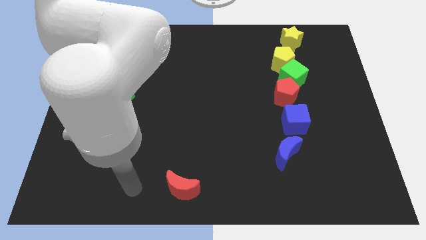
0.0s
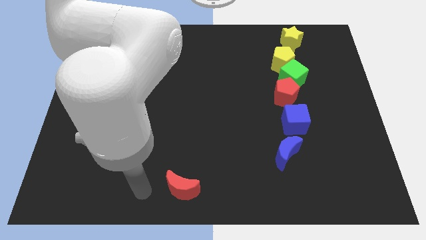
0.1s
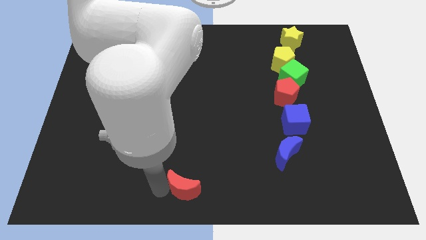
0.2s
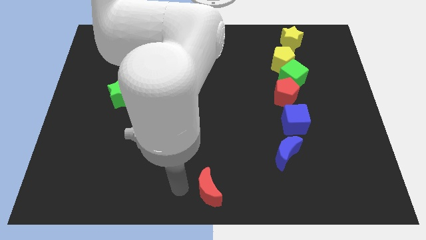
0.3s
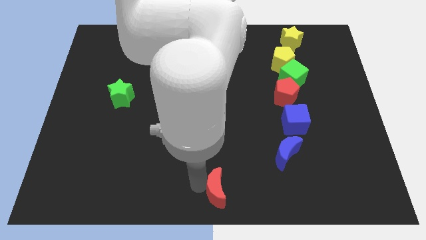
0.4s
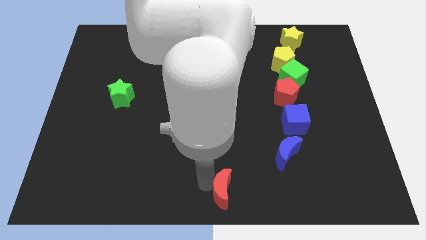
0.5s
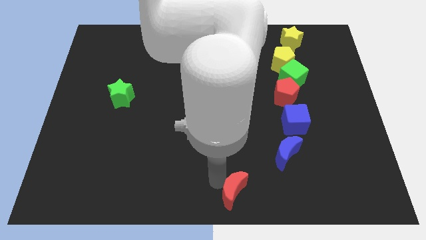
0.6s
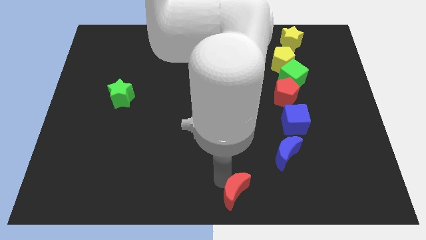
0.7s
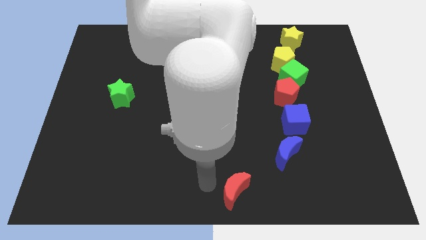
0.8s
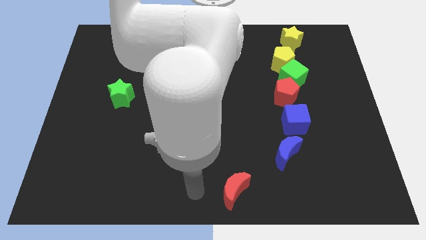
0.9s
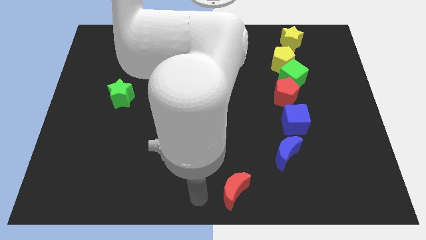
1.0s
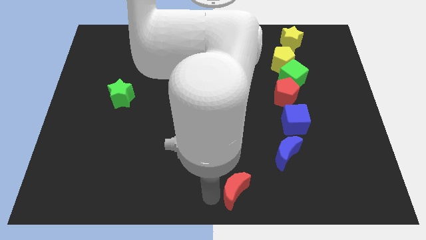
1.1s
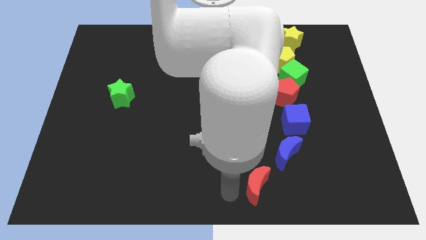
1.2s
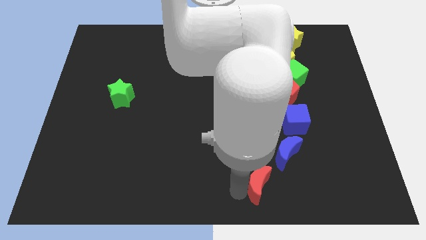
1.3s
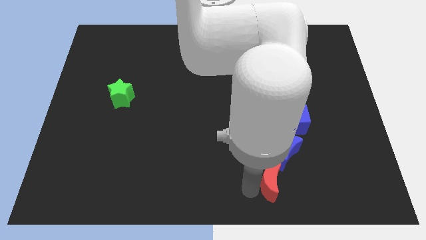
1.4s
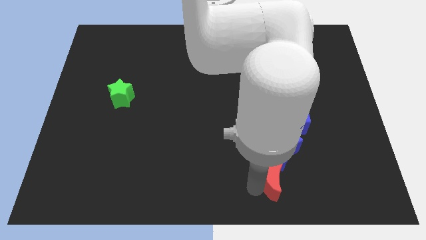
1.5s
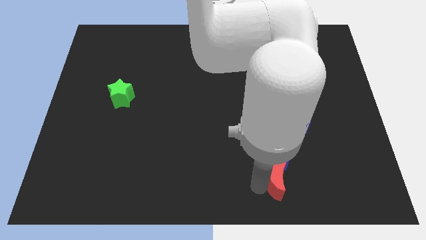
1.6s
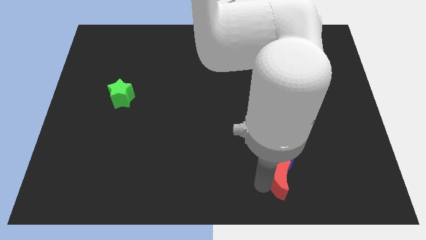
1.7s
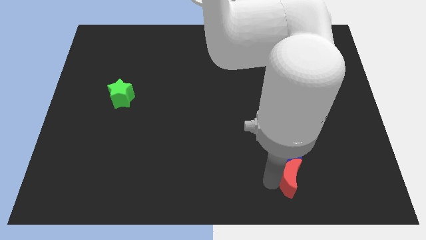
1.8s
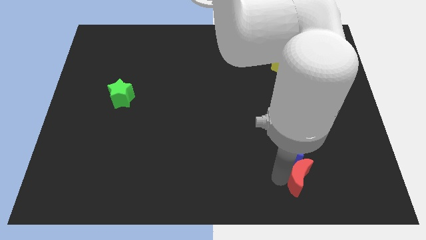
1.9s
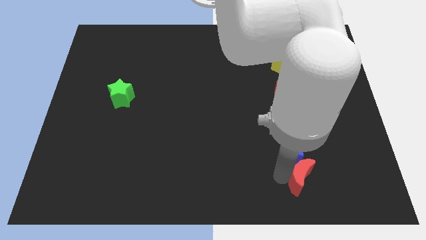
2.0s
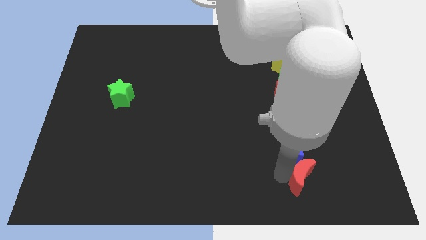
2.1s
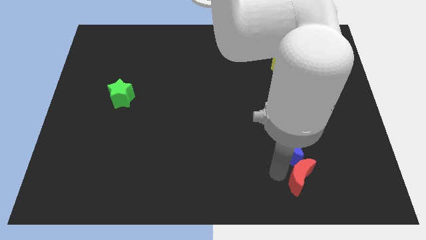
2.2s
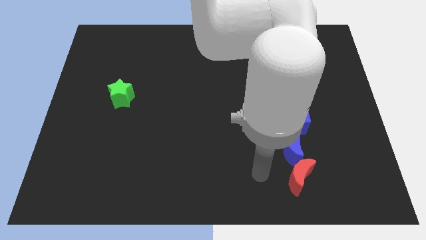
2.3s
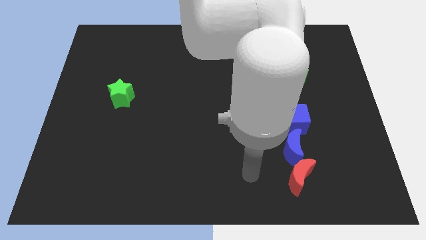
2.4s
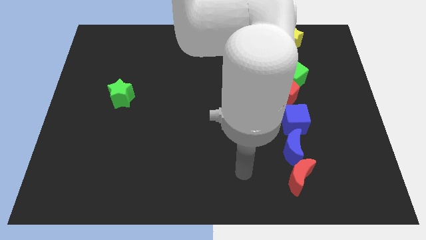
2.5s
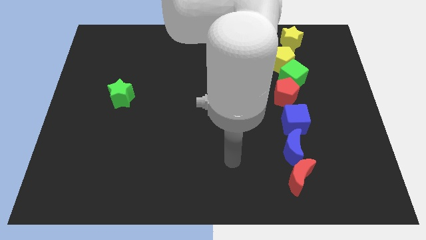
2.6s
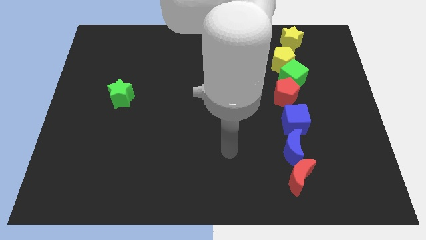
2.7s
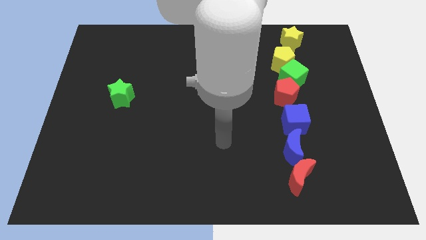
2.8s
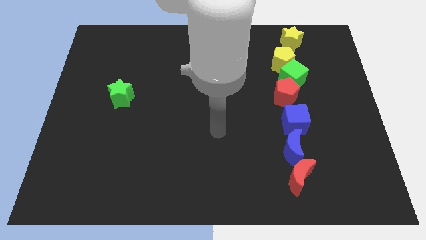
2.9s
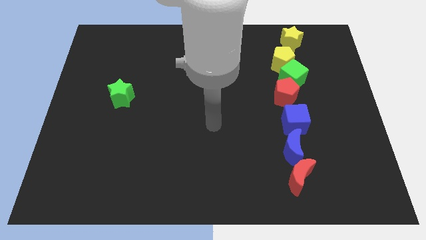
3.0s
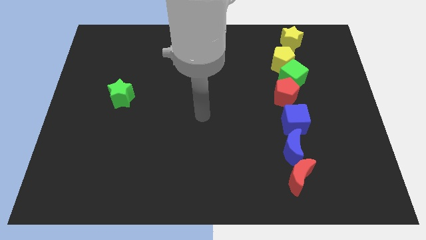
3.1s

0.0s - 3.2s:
place the red moon under the blue moon

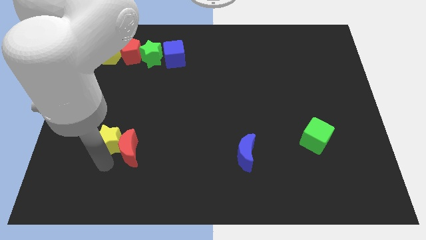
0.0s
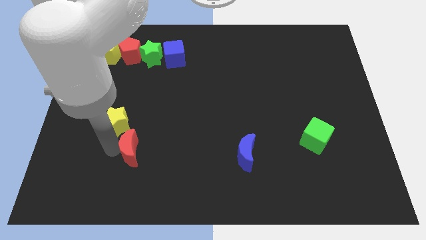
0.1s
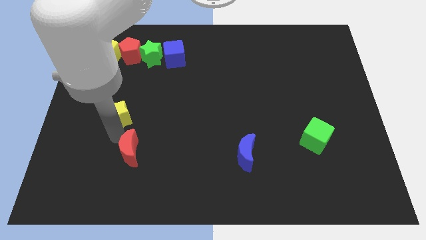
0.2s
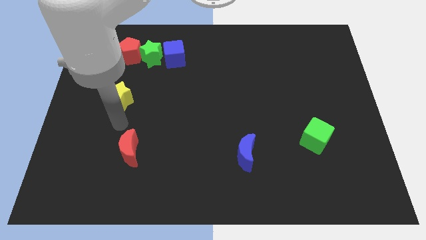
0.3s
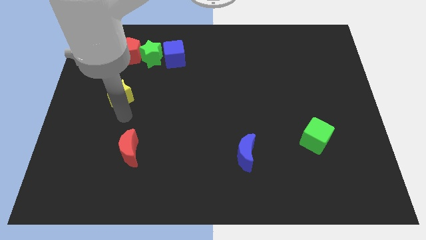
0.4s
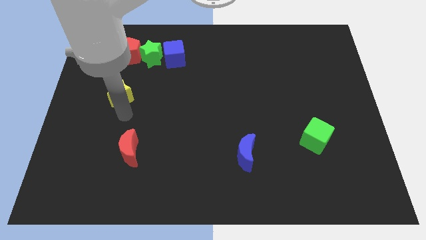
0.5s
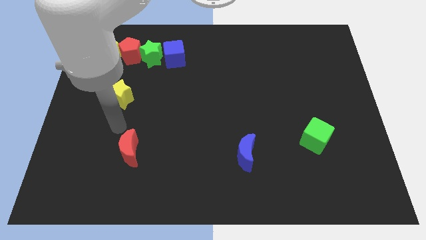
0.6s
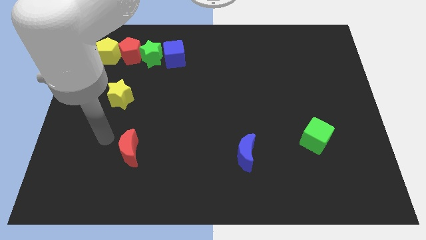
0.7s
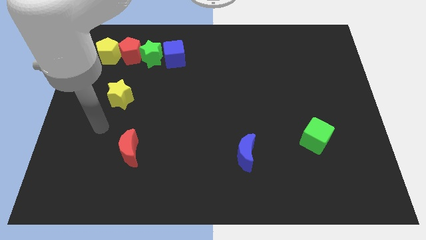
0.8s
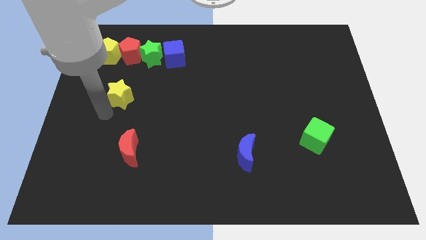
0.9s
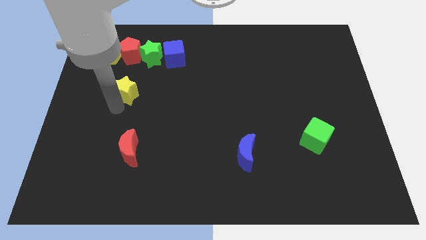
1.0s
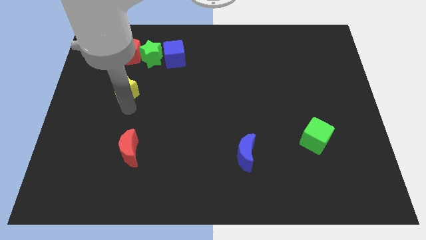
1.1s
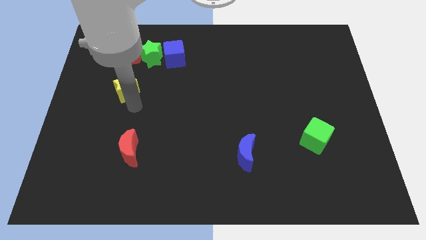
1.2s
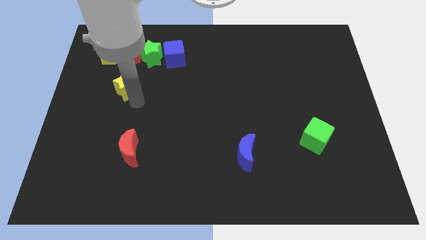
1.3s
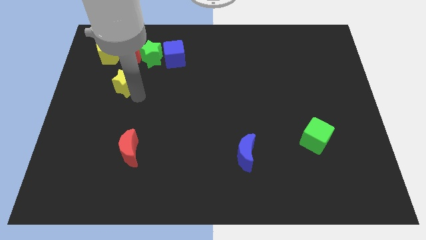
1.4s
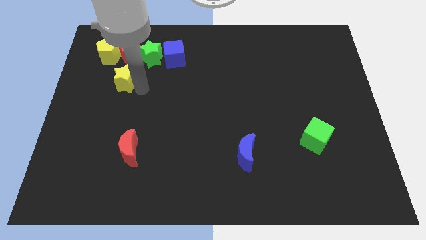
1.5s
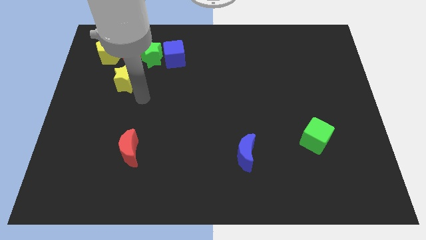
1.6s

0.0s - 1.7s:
separate yellow star from red moon

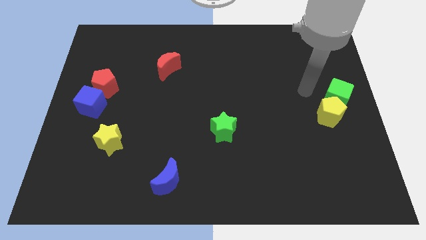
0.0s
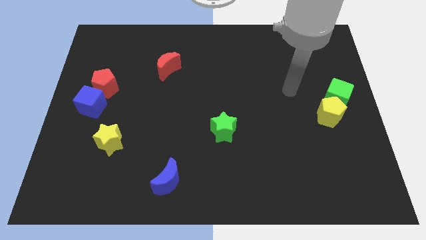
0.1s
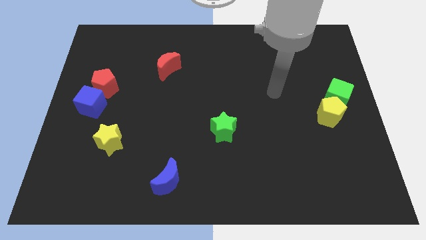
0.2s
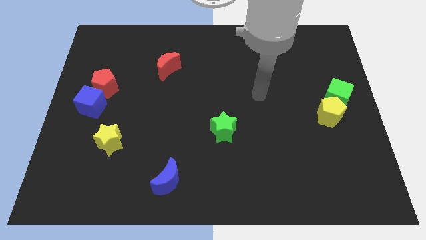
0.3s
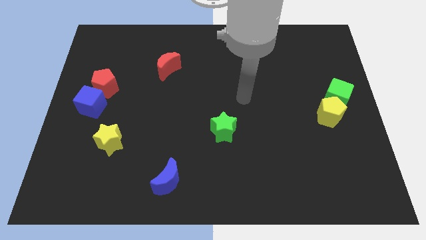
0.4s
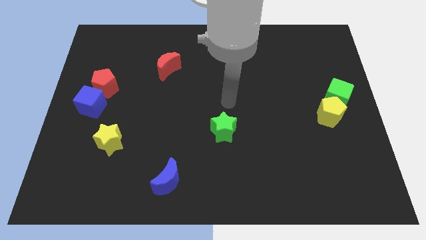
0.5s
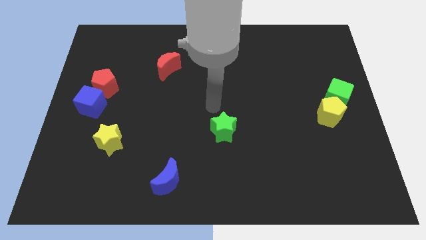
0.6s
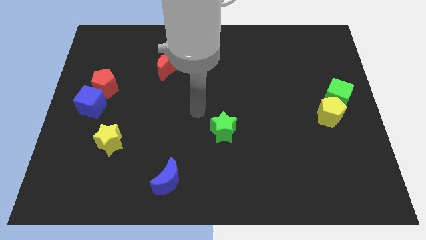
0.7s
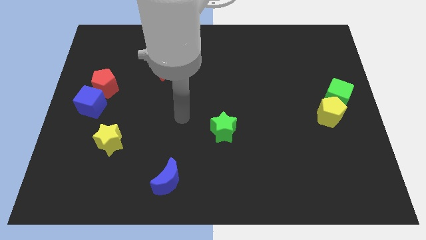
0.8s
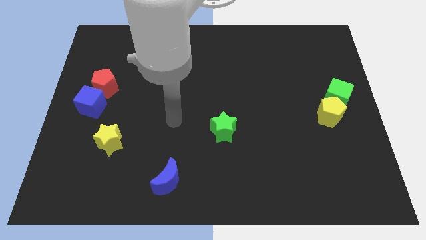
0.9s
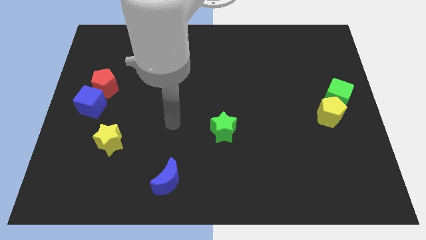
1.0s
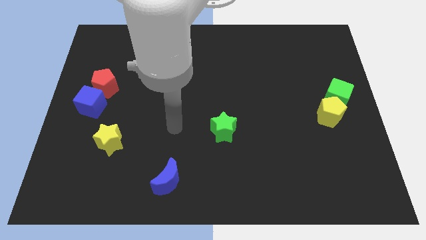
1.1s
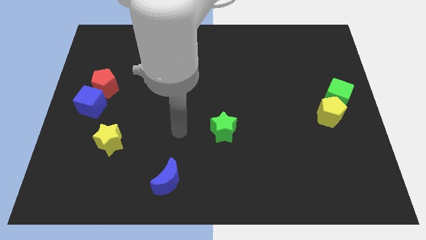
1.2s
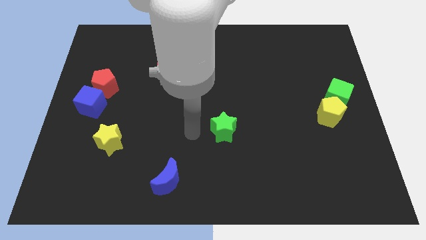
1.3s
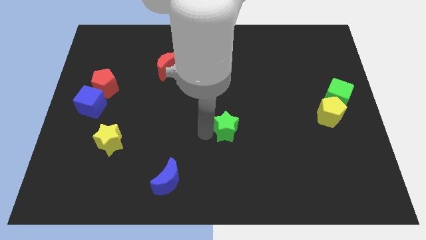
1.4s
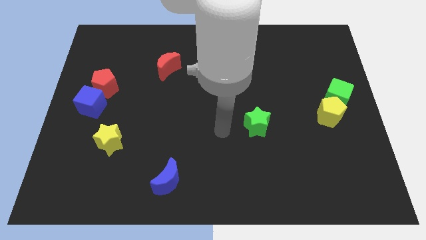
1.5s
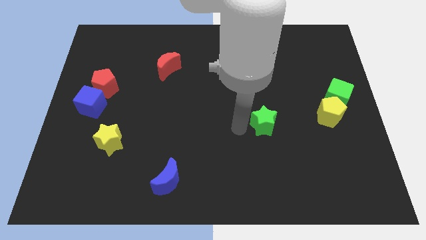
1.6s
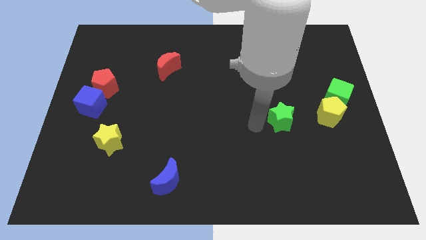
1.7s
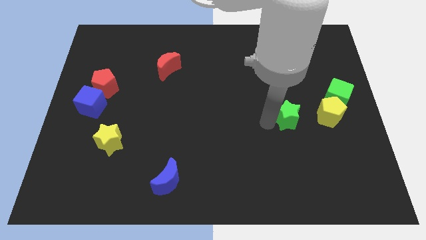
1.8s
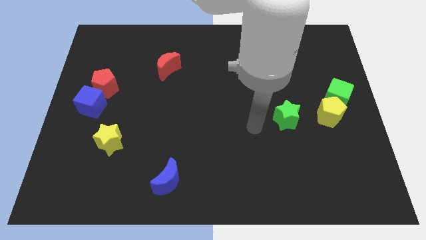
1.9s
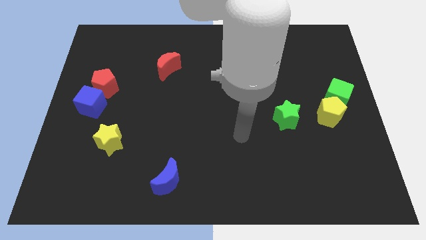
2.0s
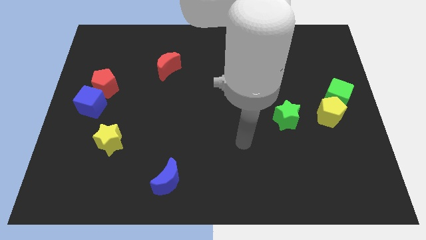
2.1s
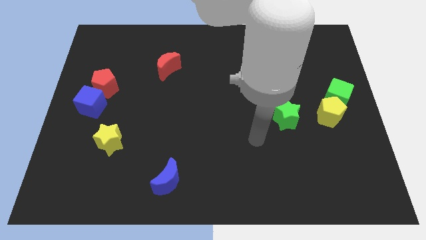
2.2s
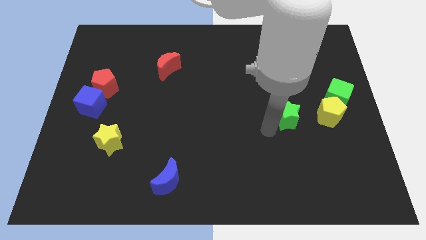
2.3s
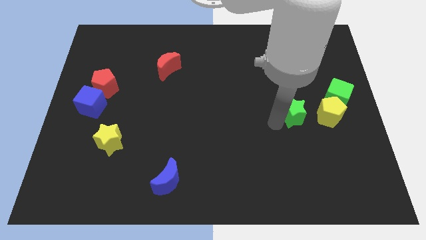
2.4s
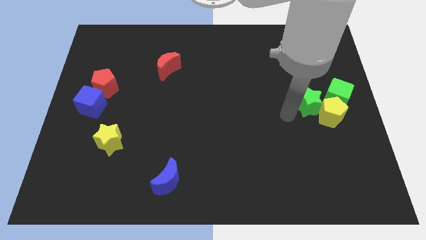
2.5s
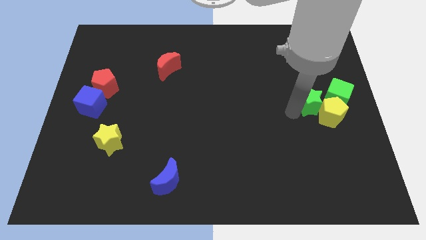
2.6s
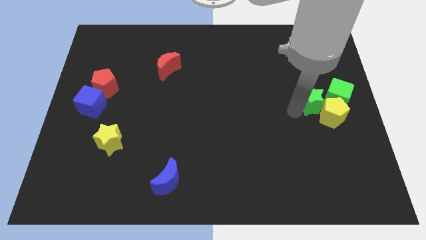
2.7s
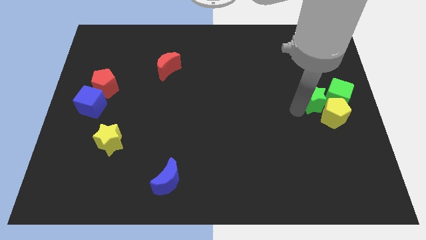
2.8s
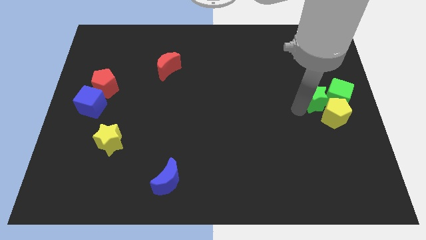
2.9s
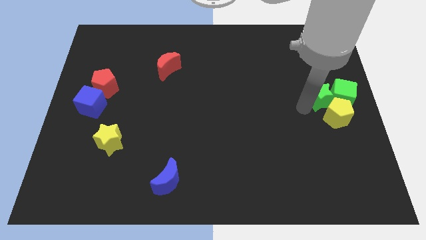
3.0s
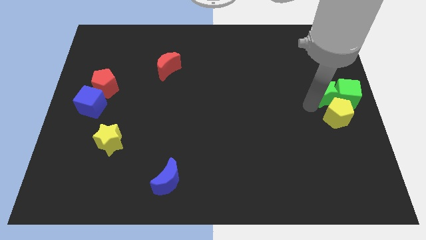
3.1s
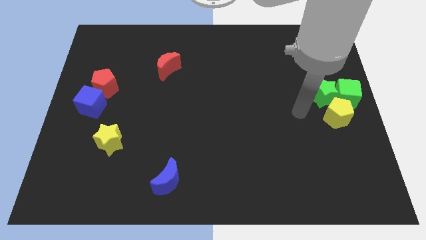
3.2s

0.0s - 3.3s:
move the green star to the left of the green cube

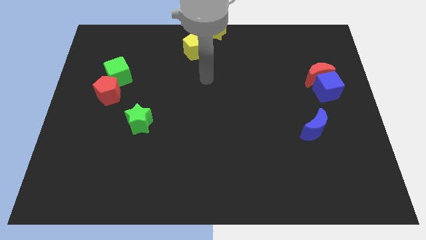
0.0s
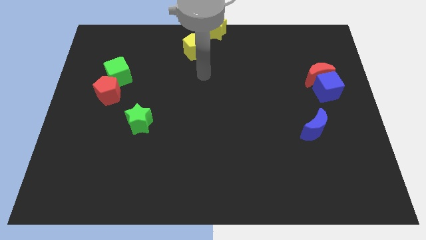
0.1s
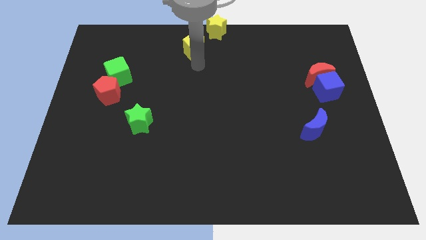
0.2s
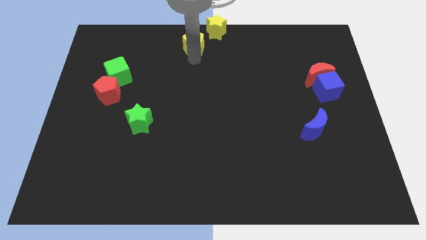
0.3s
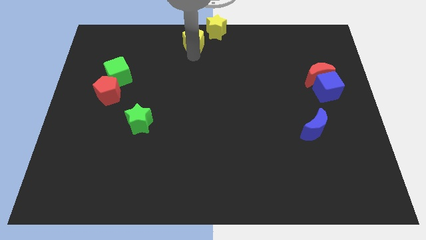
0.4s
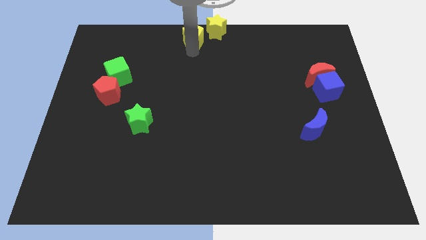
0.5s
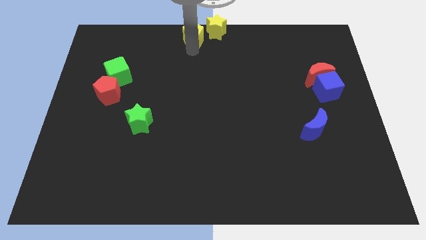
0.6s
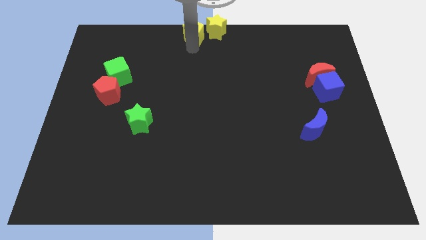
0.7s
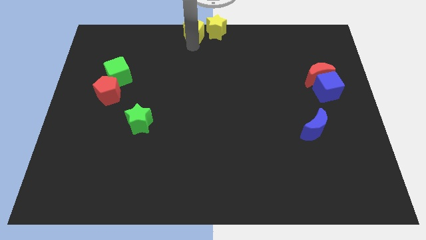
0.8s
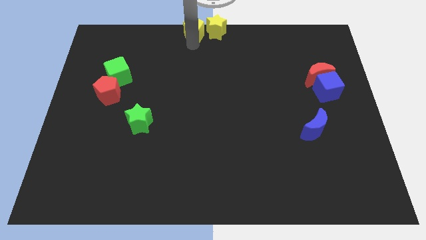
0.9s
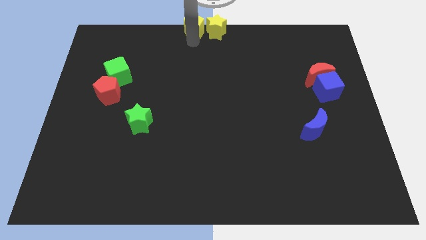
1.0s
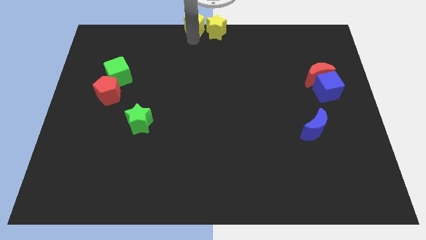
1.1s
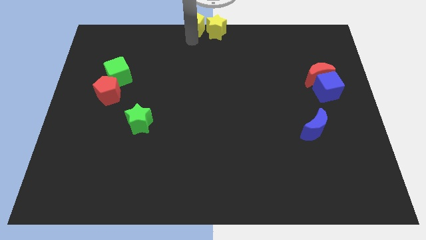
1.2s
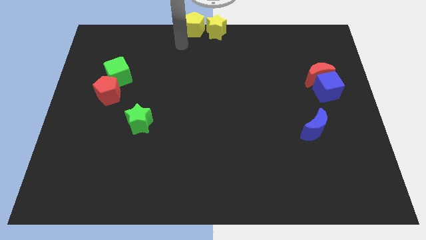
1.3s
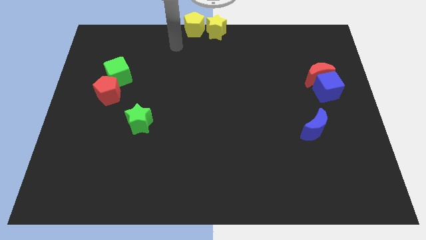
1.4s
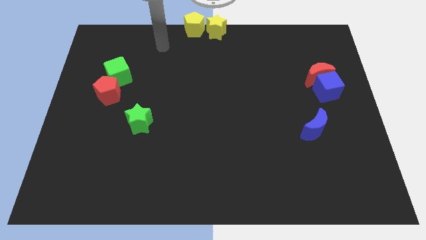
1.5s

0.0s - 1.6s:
push the yellow pentagon on the left side of the yellow star
